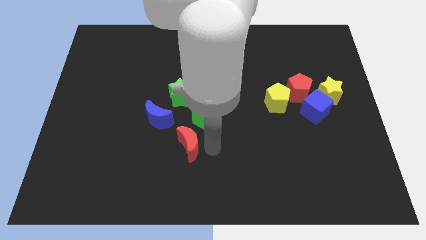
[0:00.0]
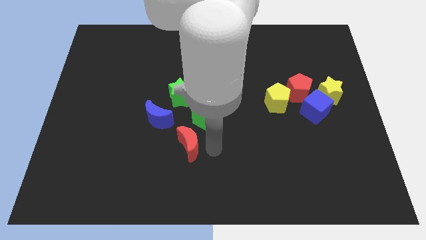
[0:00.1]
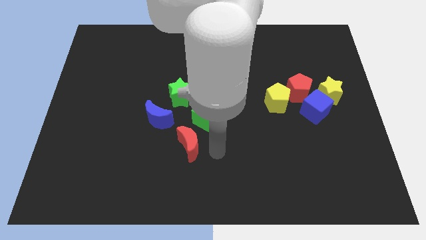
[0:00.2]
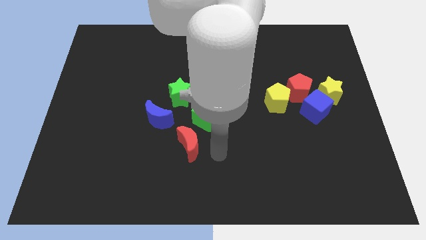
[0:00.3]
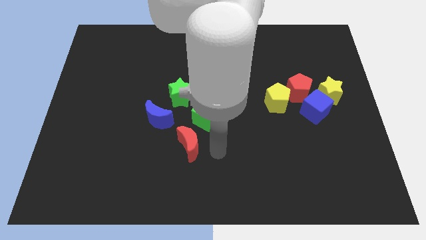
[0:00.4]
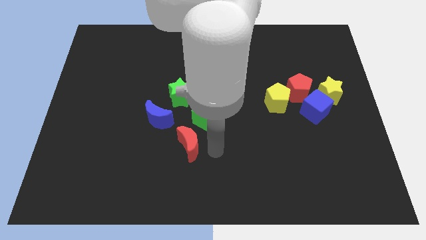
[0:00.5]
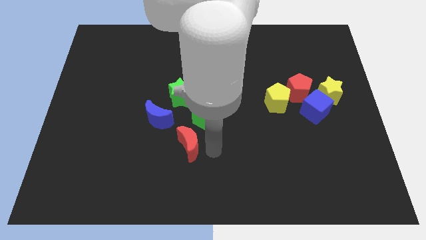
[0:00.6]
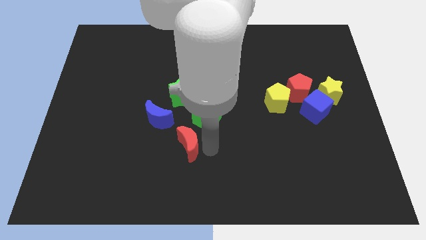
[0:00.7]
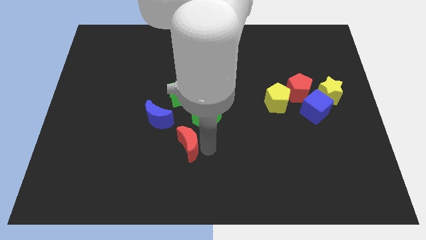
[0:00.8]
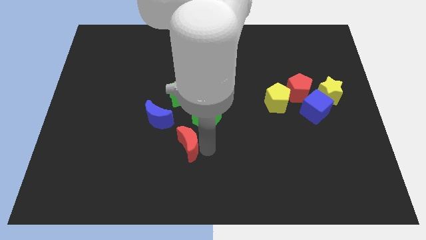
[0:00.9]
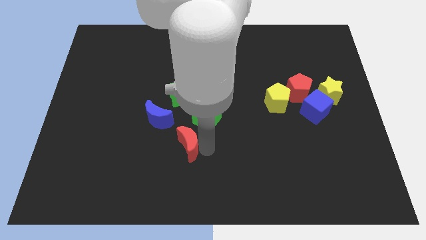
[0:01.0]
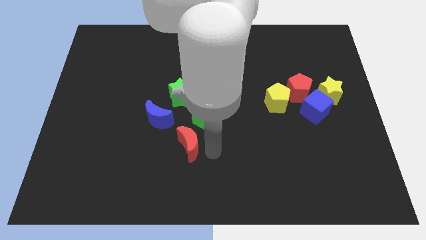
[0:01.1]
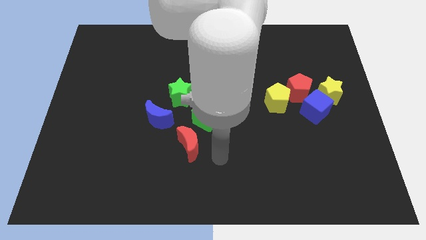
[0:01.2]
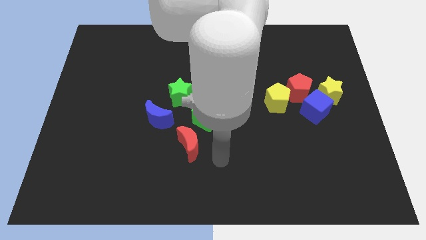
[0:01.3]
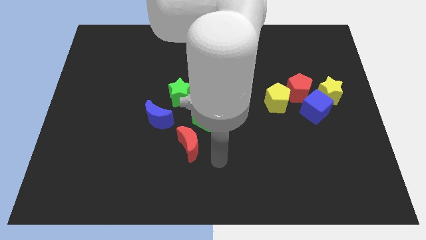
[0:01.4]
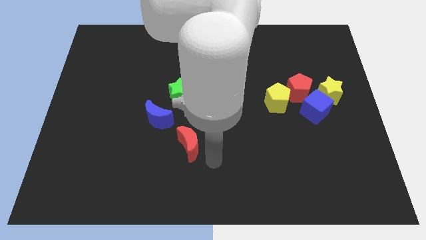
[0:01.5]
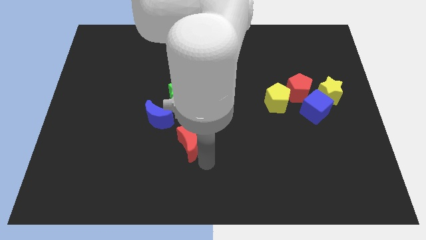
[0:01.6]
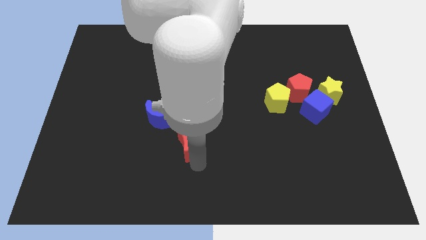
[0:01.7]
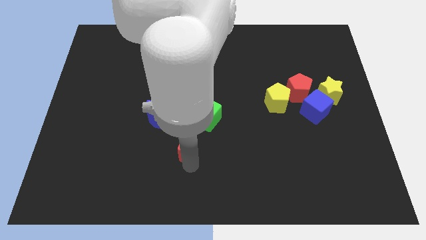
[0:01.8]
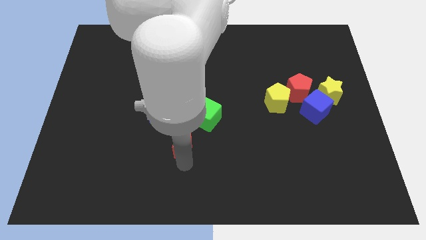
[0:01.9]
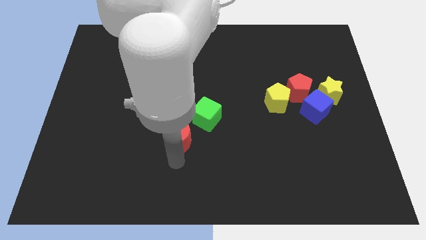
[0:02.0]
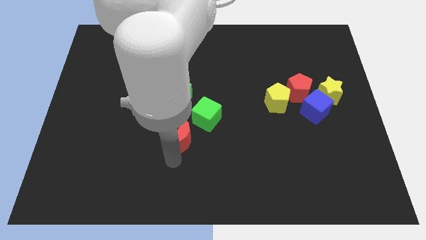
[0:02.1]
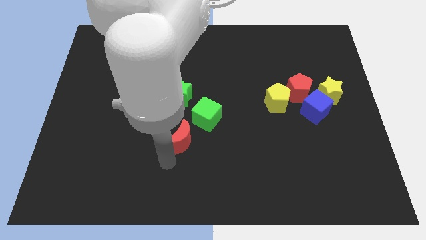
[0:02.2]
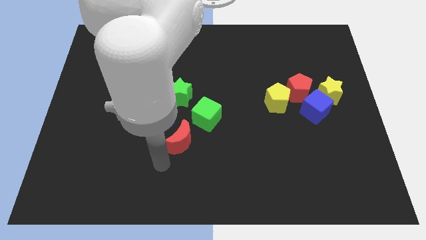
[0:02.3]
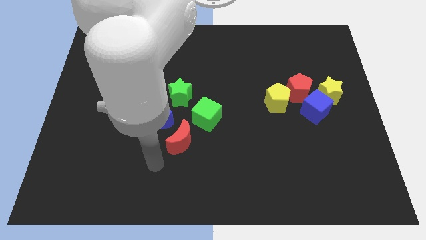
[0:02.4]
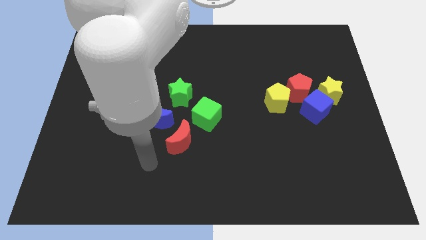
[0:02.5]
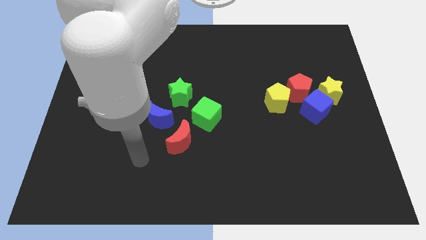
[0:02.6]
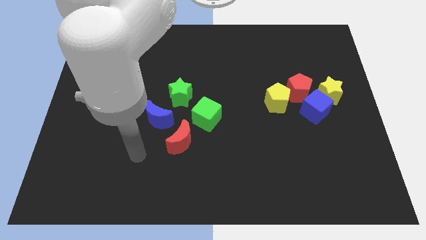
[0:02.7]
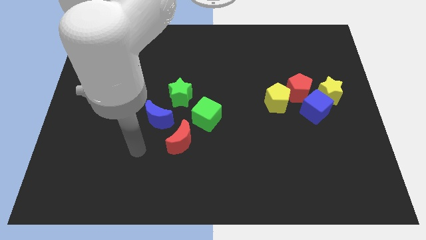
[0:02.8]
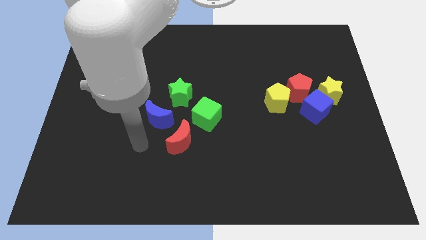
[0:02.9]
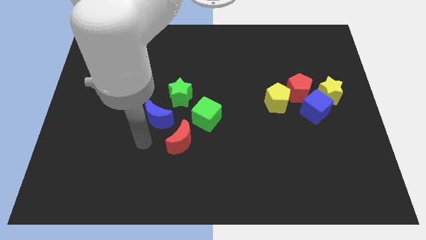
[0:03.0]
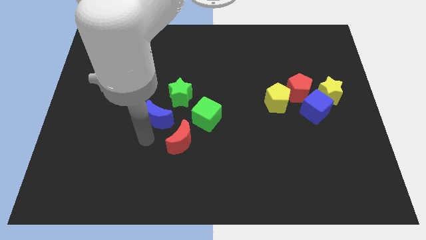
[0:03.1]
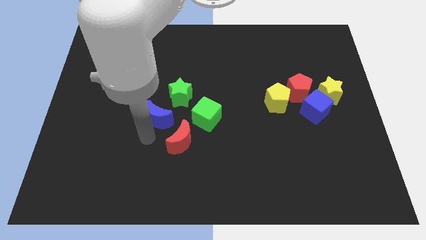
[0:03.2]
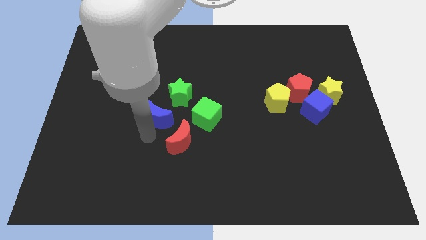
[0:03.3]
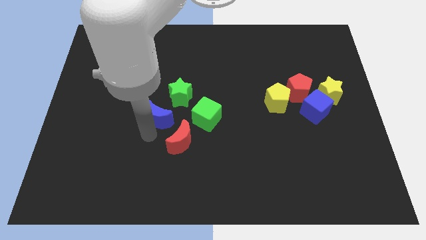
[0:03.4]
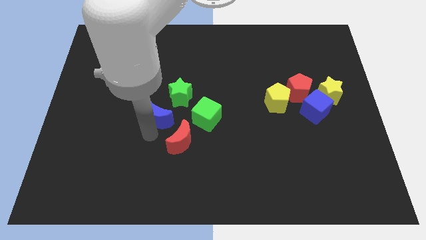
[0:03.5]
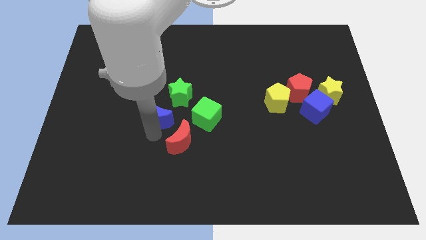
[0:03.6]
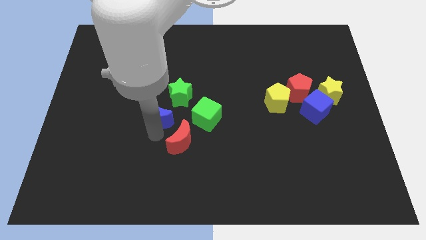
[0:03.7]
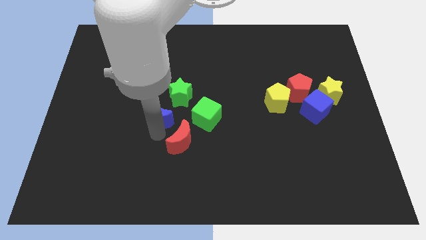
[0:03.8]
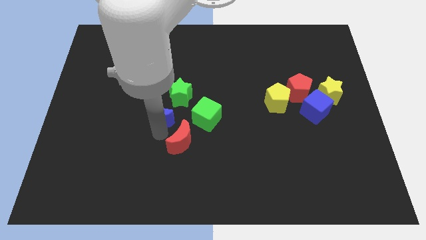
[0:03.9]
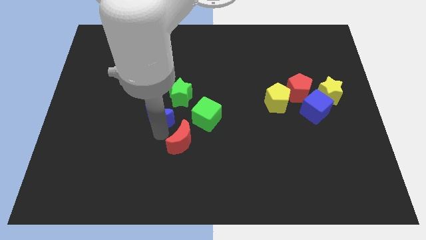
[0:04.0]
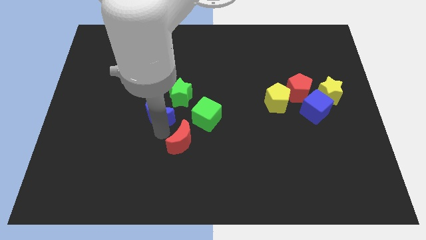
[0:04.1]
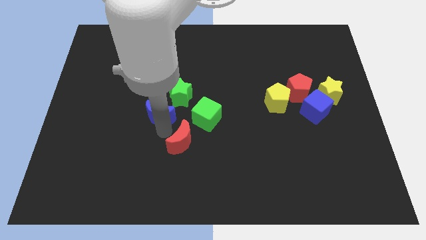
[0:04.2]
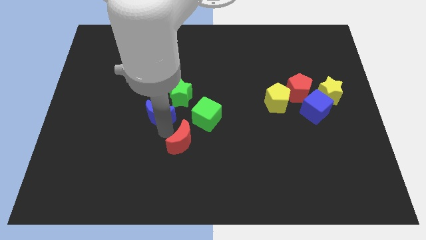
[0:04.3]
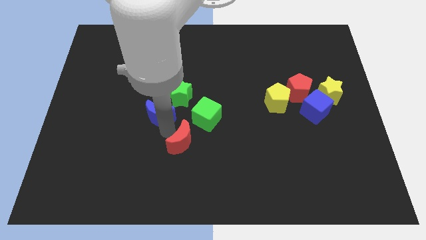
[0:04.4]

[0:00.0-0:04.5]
adjust the red crescent diagonally to the bottom right of the blue crescent

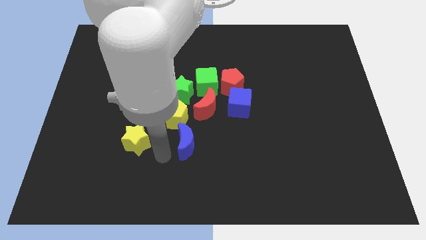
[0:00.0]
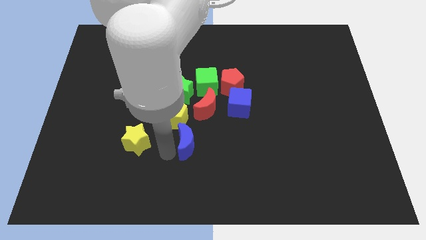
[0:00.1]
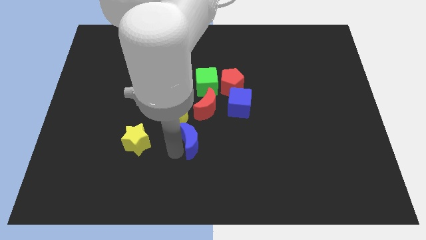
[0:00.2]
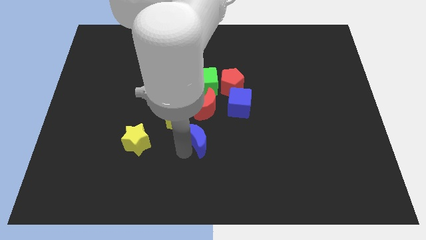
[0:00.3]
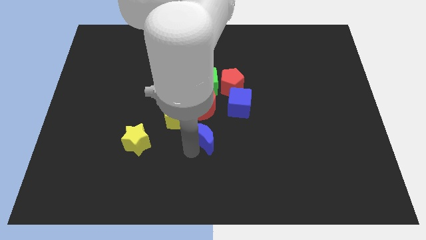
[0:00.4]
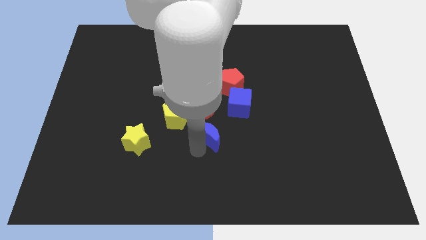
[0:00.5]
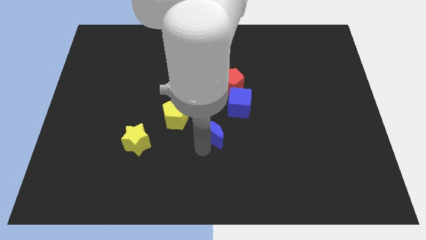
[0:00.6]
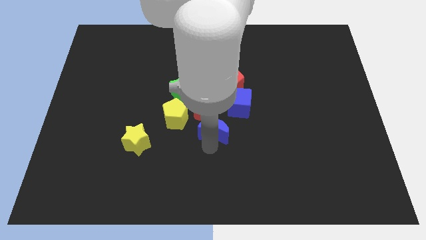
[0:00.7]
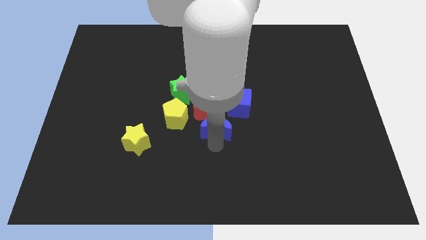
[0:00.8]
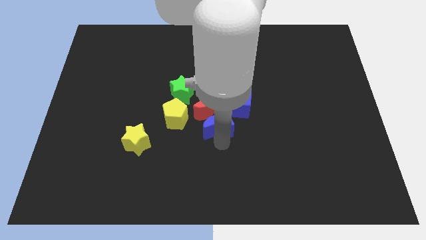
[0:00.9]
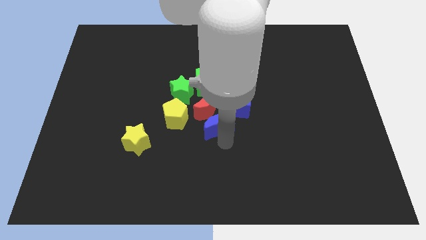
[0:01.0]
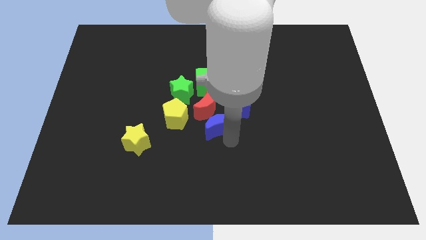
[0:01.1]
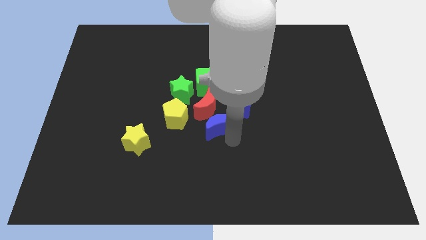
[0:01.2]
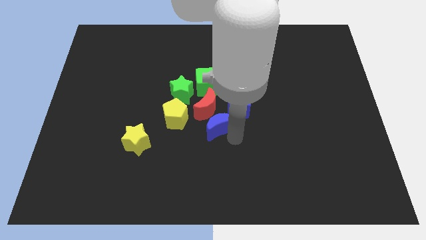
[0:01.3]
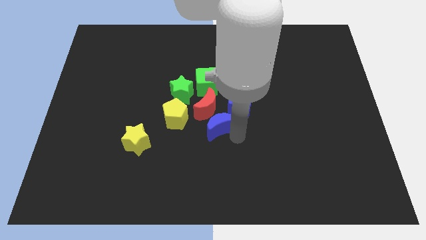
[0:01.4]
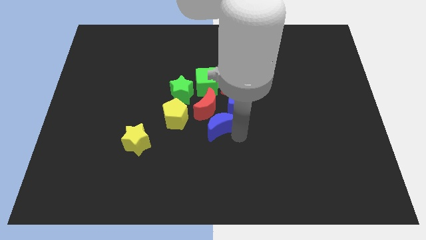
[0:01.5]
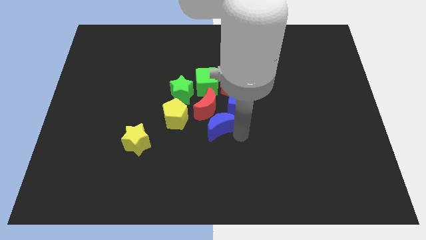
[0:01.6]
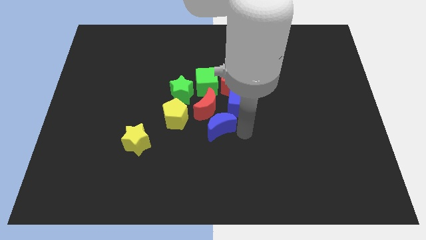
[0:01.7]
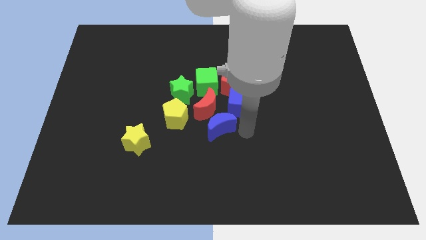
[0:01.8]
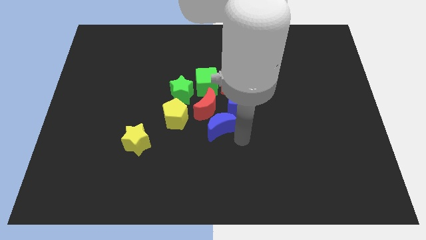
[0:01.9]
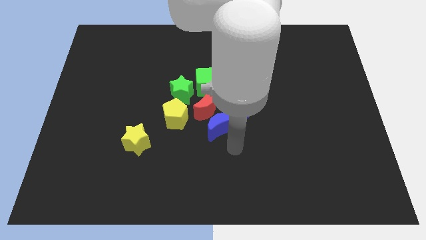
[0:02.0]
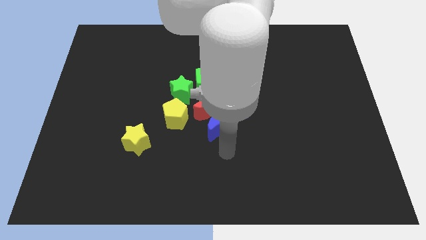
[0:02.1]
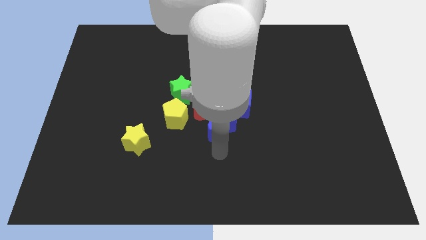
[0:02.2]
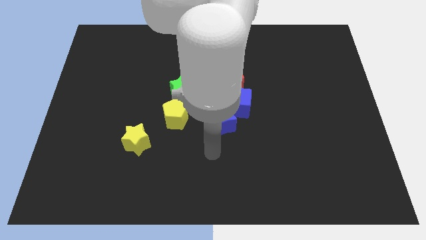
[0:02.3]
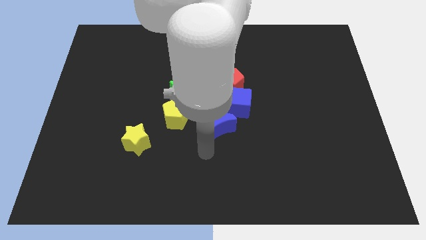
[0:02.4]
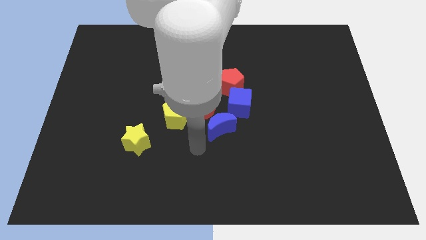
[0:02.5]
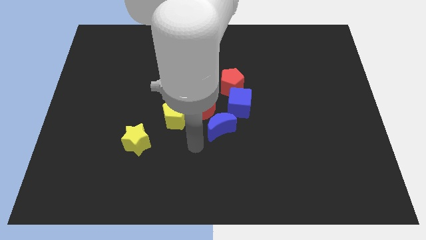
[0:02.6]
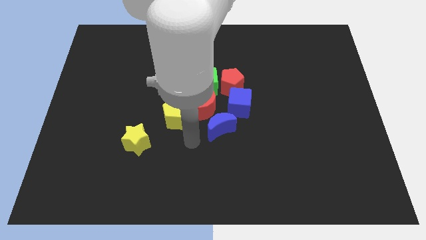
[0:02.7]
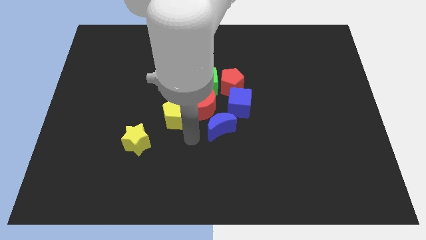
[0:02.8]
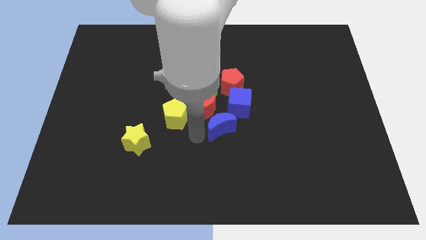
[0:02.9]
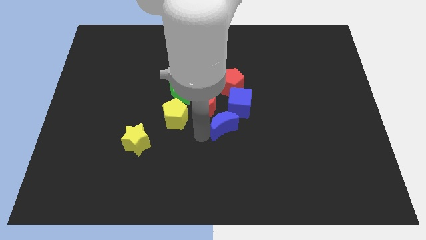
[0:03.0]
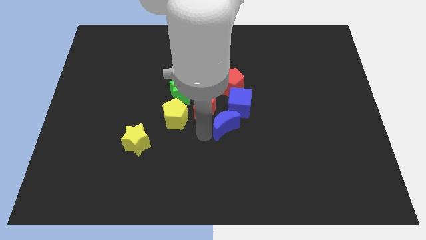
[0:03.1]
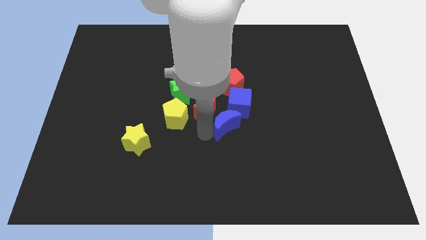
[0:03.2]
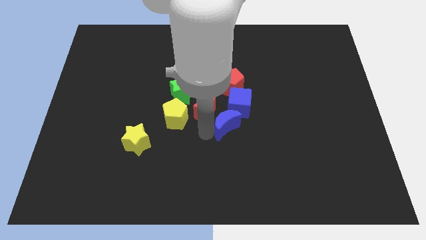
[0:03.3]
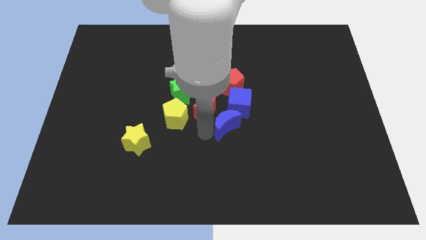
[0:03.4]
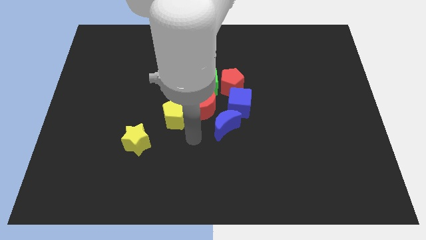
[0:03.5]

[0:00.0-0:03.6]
push the blue crescent to the bottom of blue cube

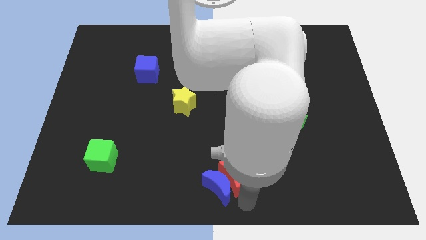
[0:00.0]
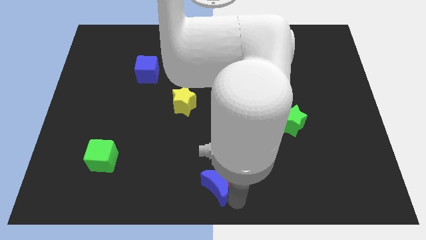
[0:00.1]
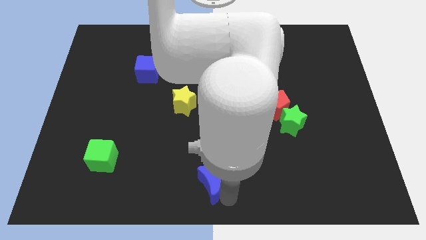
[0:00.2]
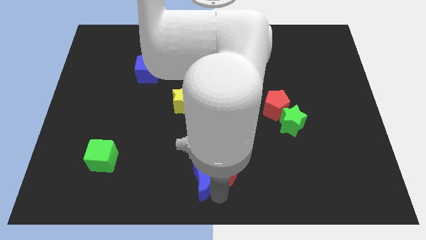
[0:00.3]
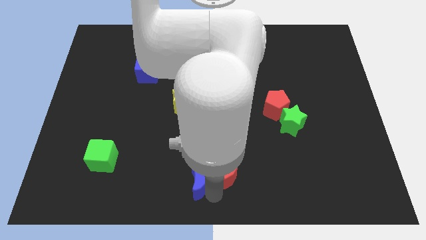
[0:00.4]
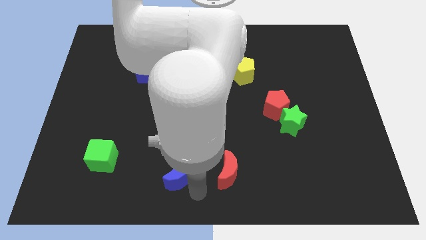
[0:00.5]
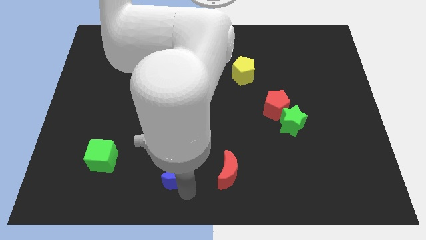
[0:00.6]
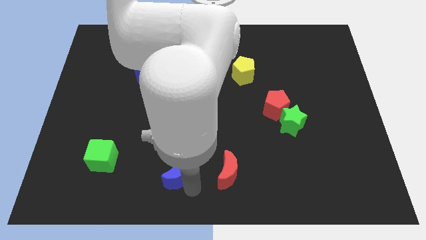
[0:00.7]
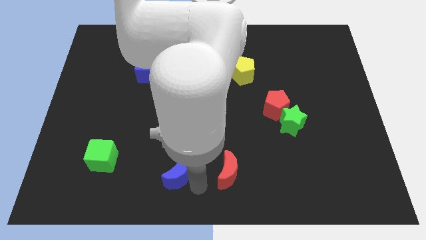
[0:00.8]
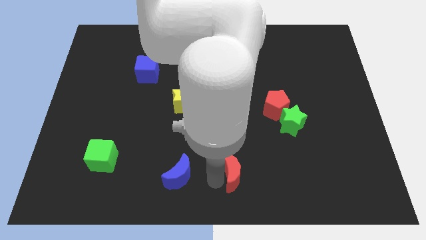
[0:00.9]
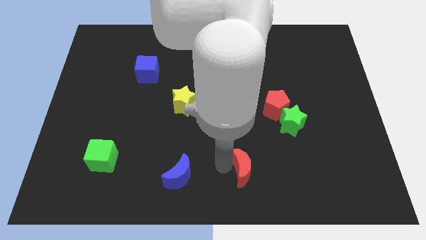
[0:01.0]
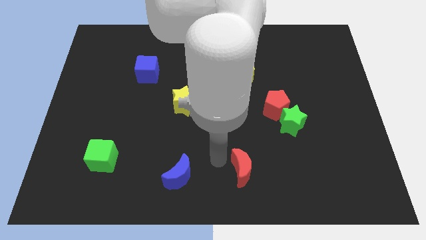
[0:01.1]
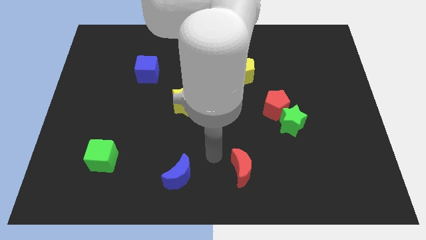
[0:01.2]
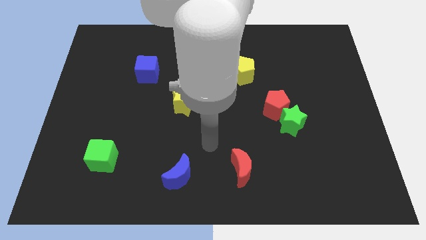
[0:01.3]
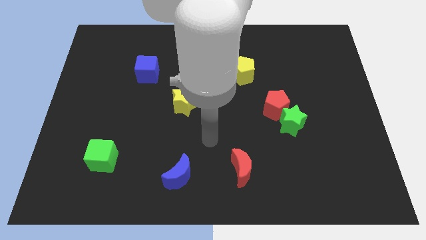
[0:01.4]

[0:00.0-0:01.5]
separate the red crescent and the blue moon
